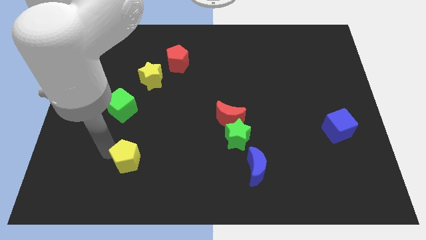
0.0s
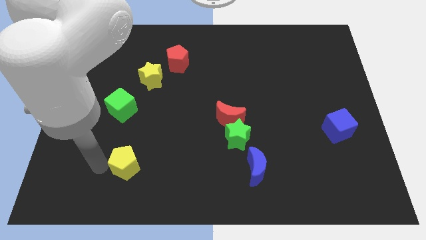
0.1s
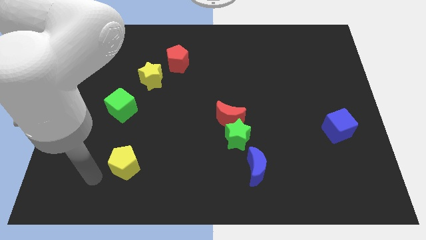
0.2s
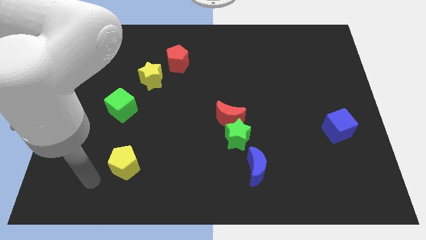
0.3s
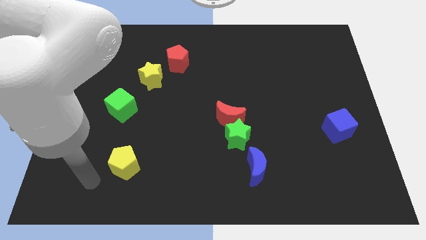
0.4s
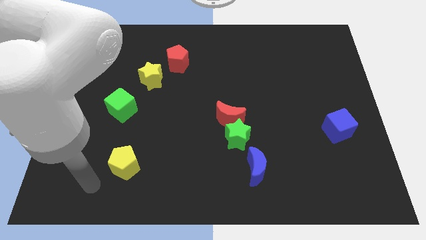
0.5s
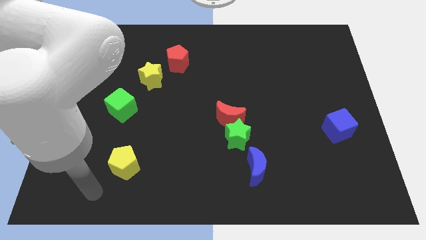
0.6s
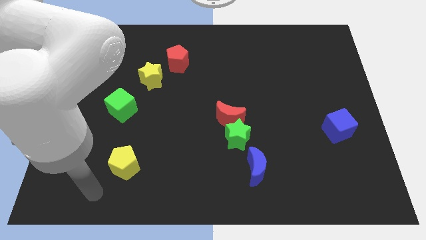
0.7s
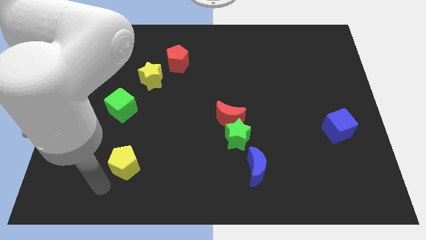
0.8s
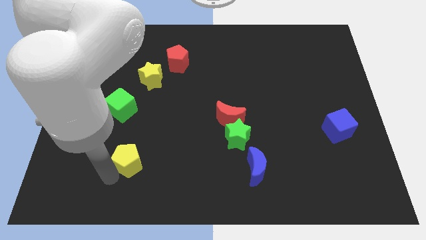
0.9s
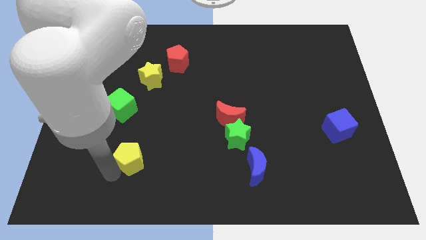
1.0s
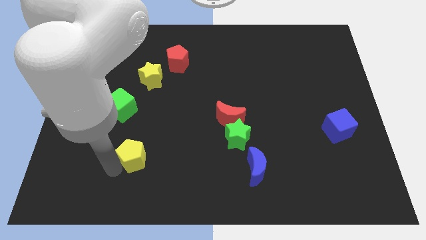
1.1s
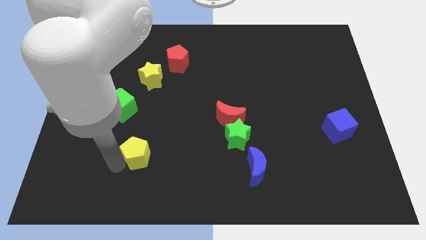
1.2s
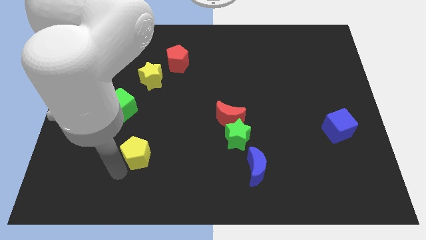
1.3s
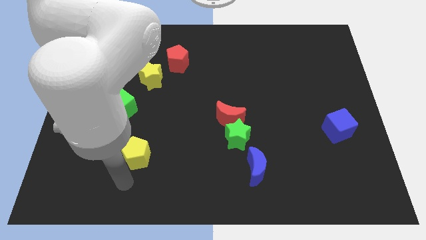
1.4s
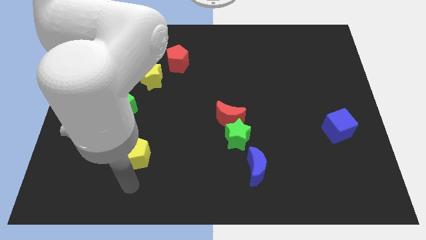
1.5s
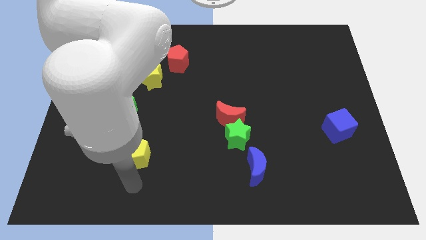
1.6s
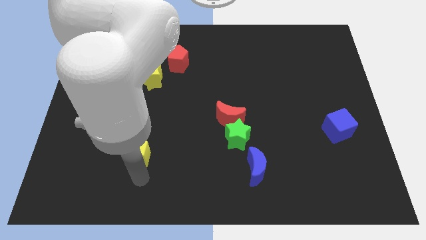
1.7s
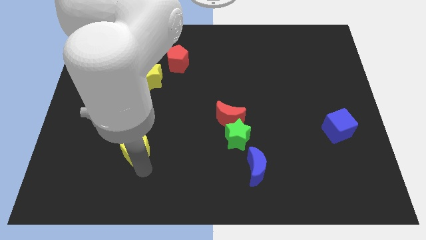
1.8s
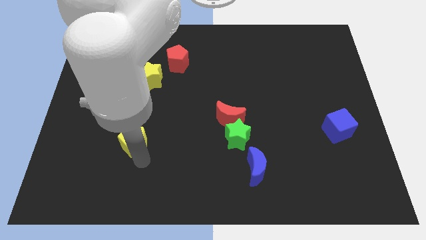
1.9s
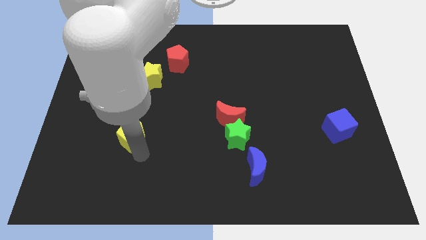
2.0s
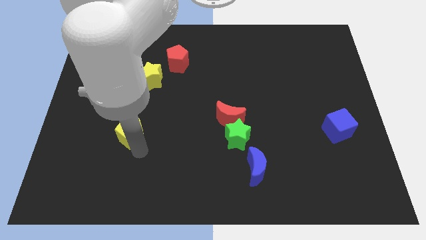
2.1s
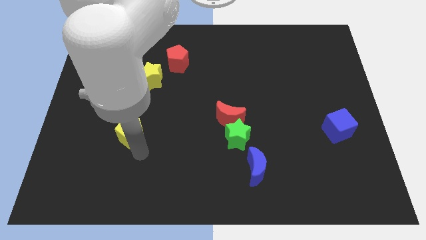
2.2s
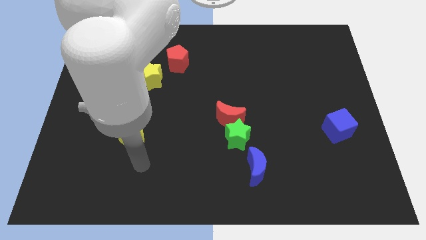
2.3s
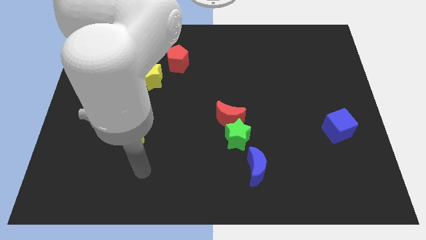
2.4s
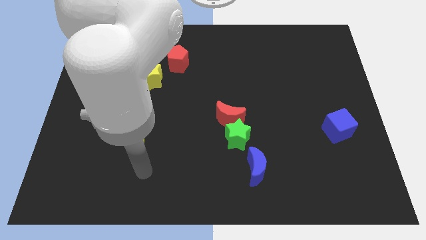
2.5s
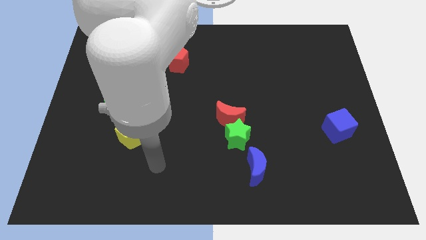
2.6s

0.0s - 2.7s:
move the yellow pentagon into the green cube

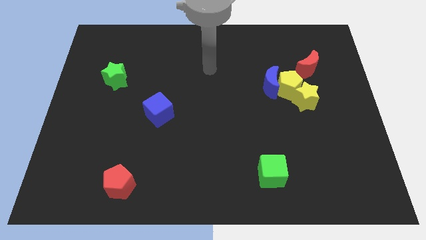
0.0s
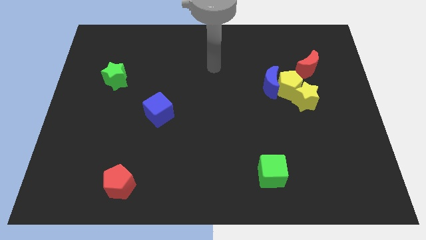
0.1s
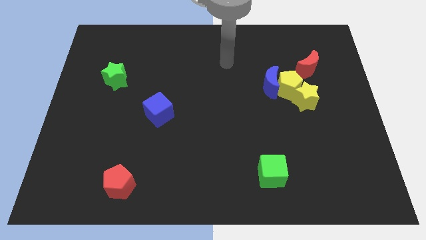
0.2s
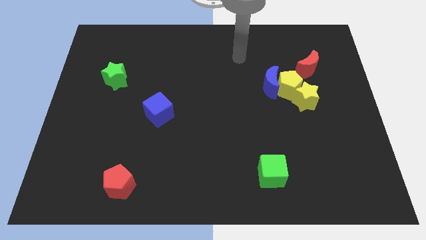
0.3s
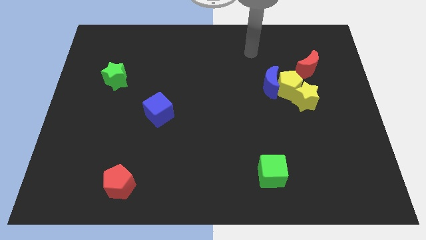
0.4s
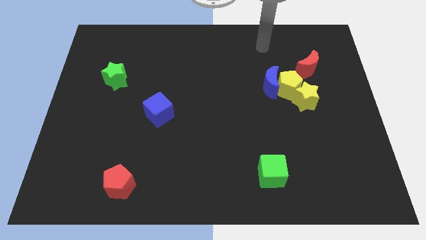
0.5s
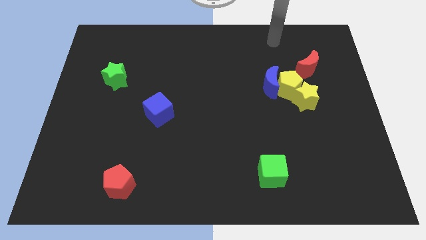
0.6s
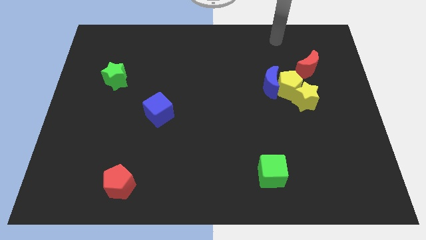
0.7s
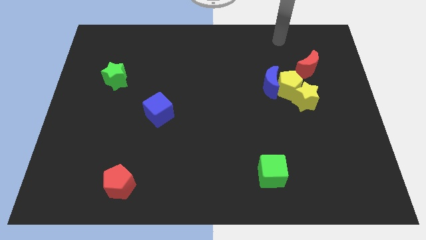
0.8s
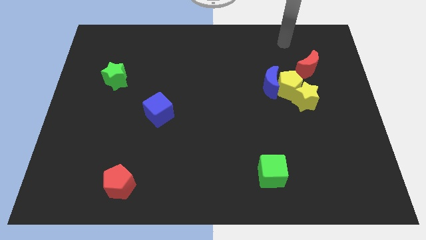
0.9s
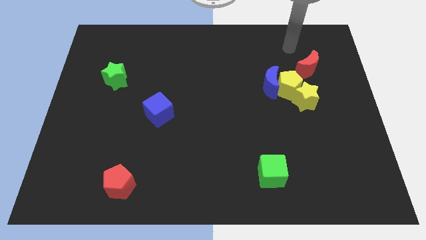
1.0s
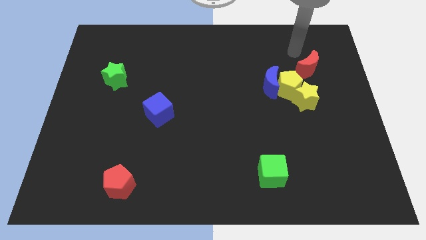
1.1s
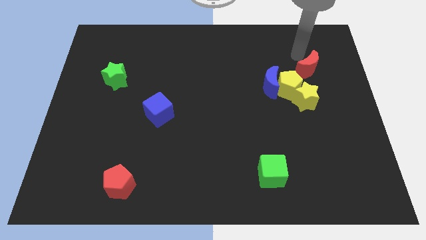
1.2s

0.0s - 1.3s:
place the arm close to red crescent

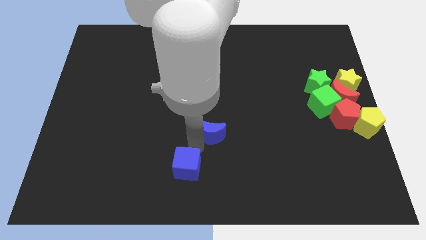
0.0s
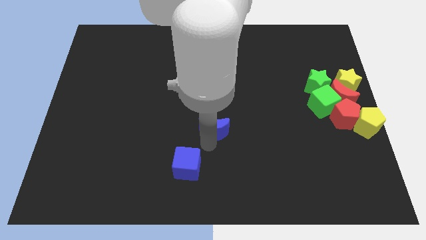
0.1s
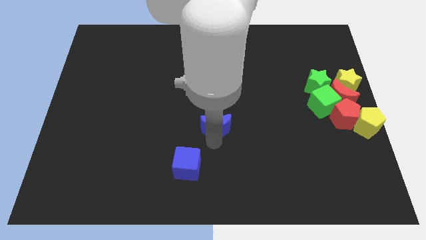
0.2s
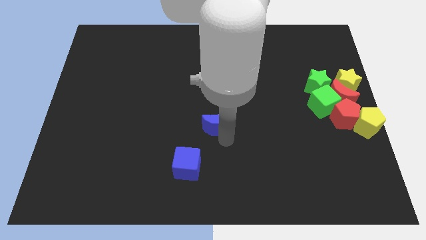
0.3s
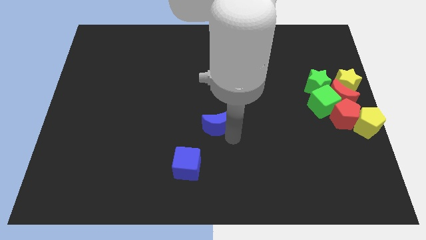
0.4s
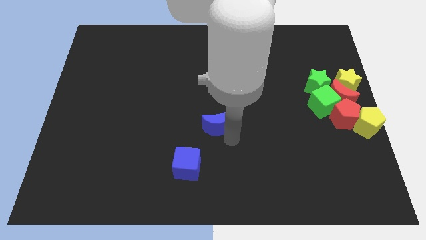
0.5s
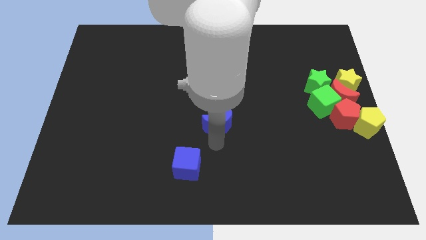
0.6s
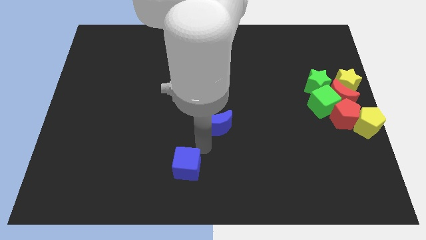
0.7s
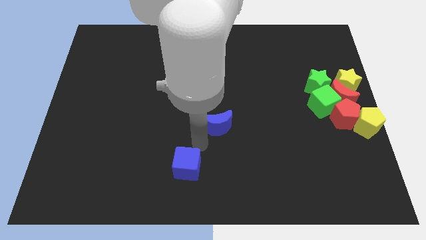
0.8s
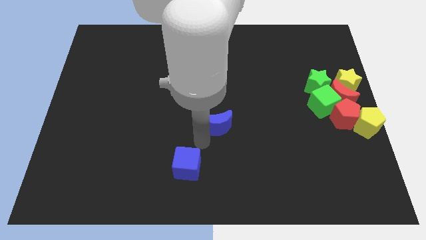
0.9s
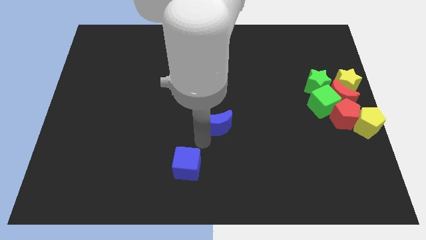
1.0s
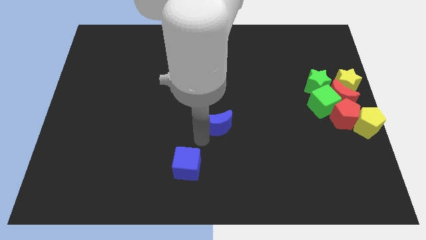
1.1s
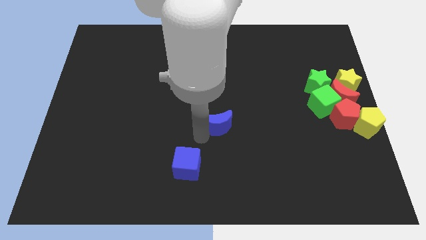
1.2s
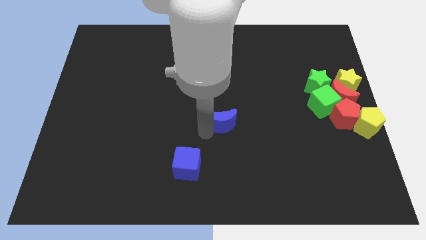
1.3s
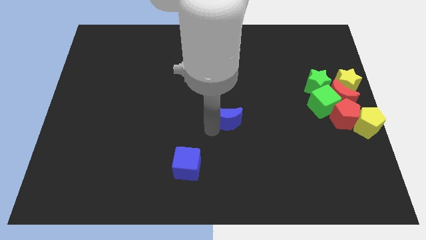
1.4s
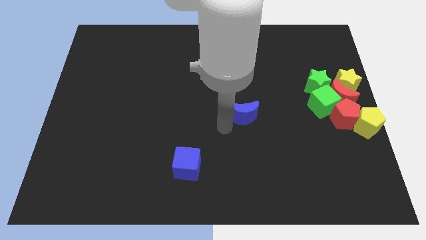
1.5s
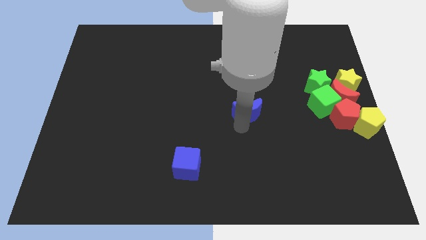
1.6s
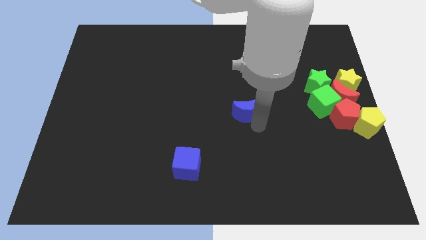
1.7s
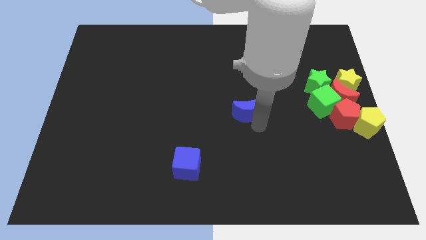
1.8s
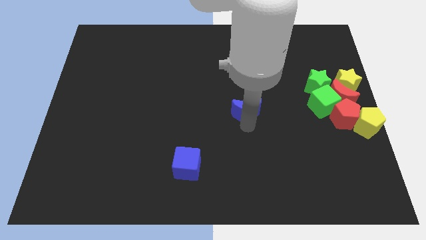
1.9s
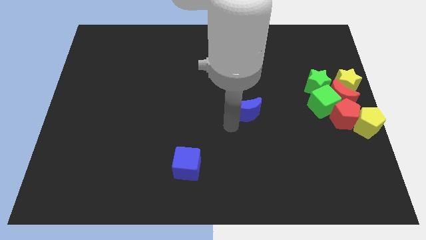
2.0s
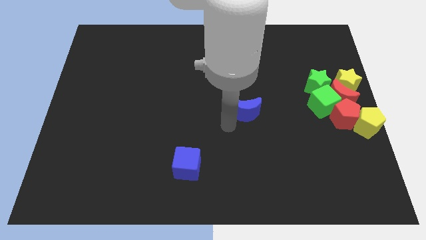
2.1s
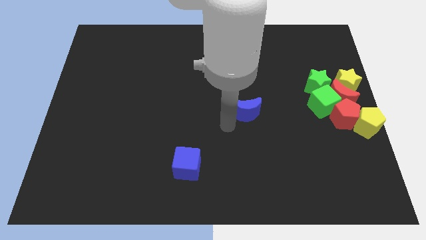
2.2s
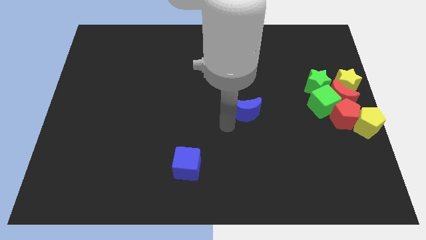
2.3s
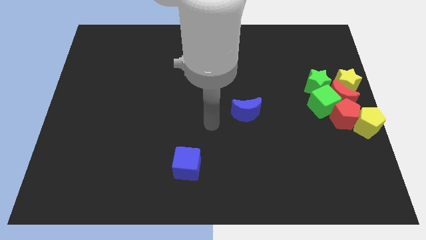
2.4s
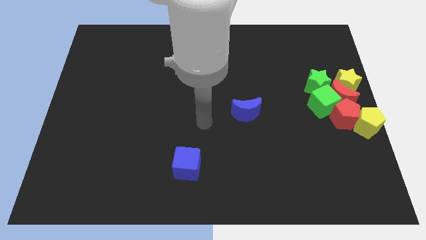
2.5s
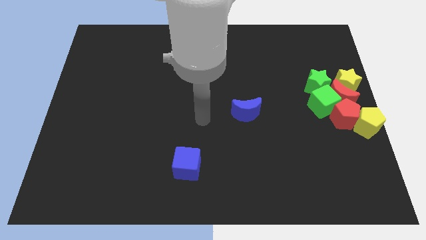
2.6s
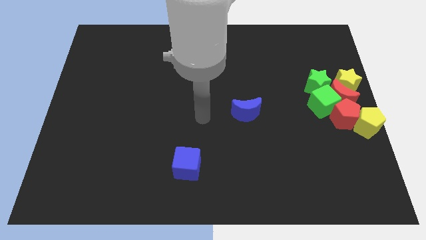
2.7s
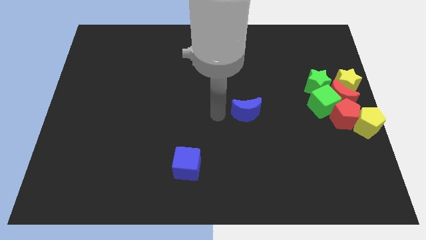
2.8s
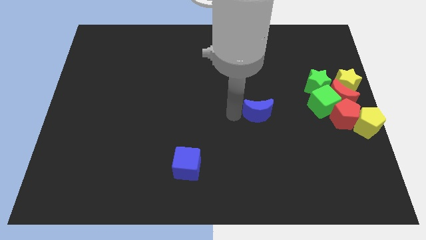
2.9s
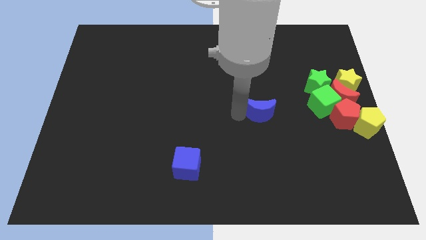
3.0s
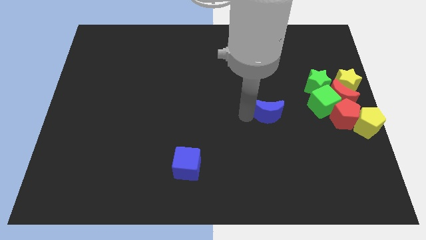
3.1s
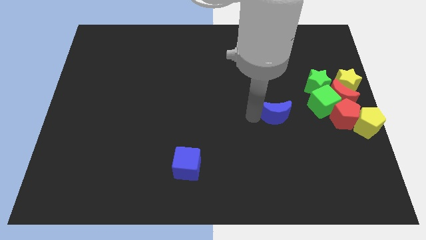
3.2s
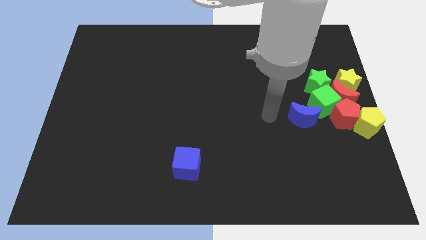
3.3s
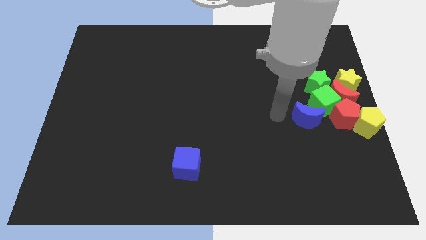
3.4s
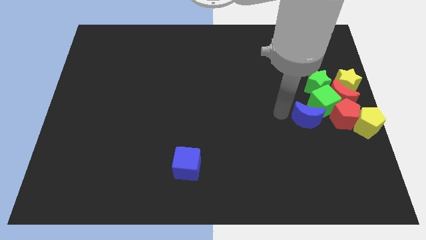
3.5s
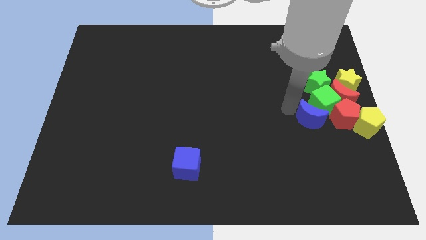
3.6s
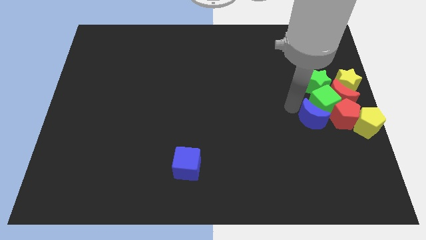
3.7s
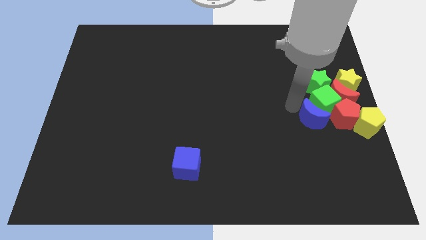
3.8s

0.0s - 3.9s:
push blue crescent into the green cube

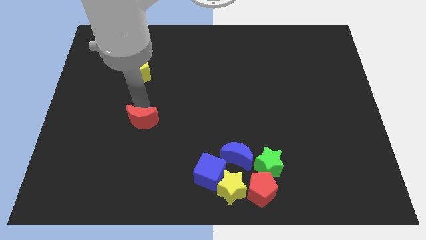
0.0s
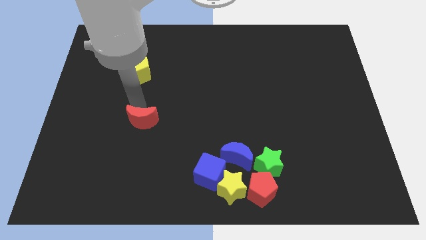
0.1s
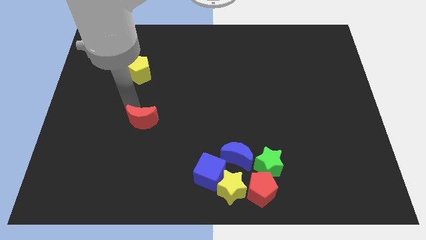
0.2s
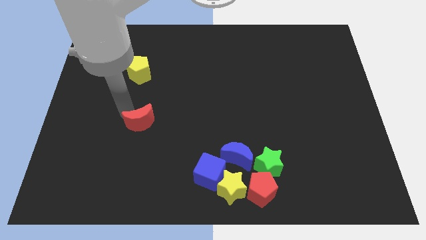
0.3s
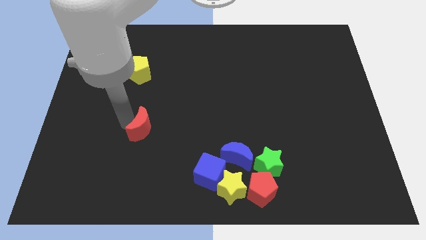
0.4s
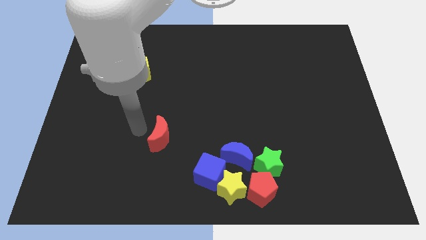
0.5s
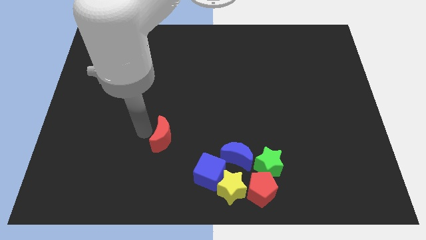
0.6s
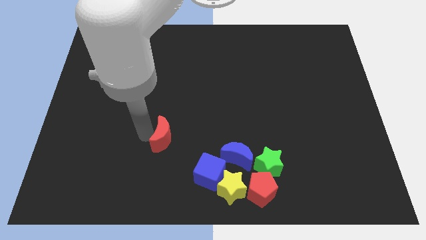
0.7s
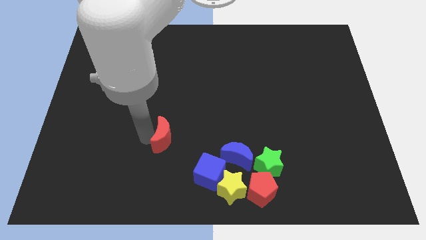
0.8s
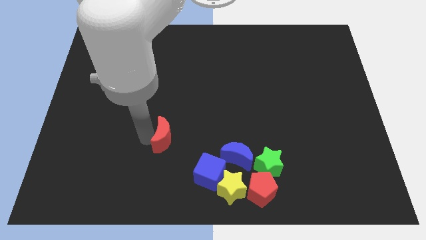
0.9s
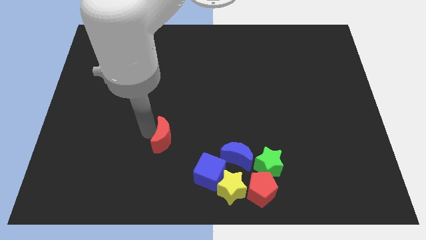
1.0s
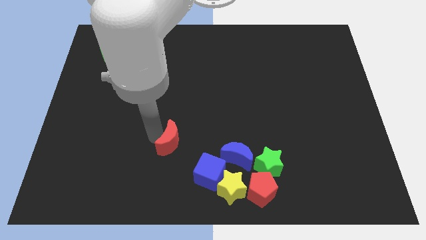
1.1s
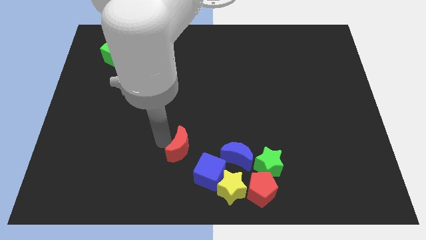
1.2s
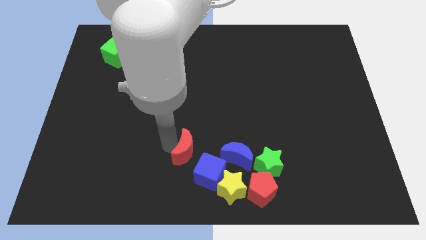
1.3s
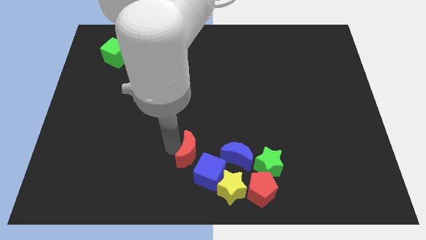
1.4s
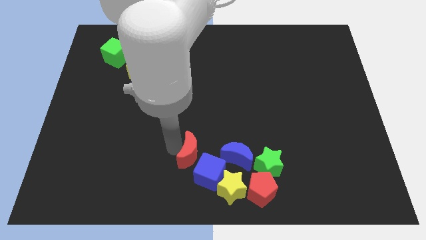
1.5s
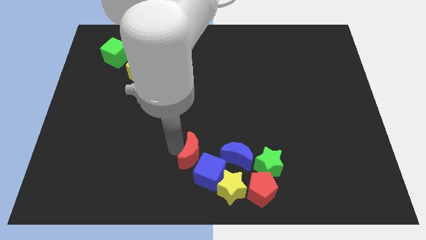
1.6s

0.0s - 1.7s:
place the red crescent to the left of the blue crescent
